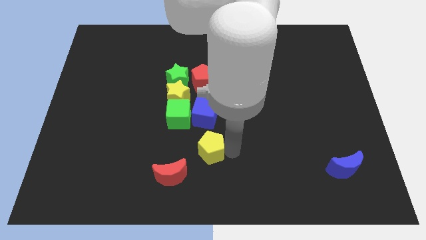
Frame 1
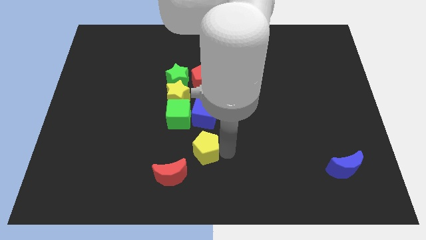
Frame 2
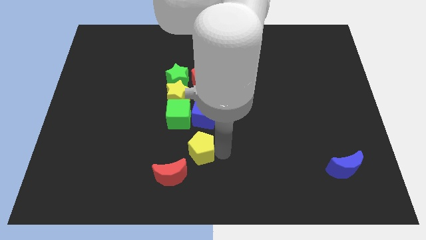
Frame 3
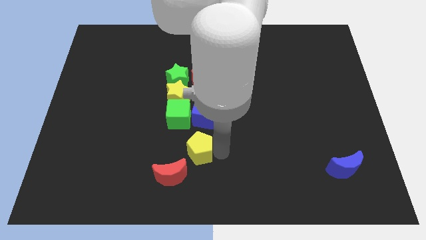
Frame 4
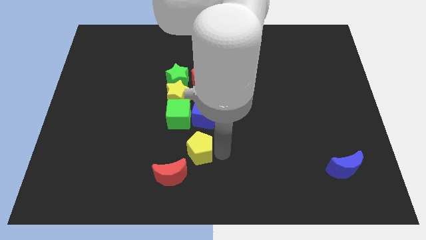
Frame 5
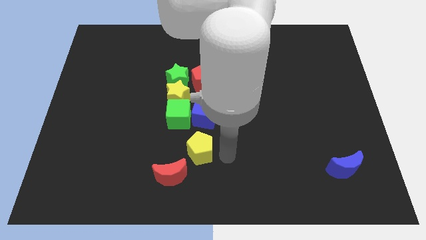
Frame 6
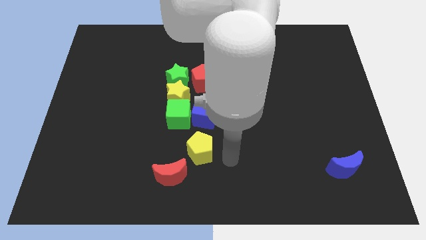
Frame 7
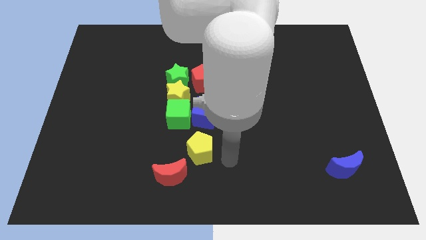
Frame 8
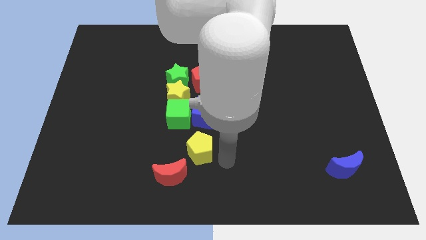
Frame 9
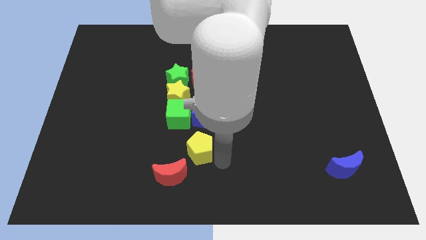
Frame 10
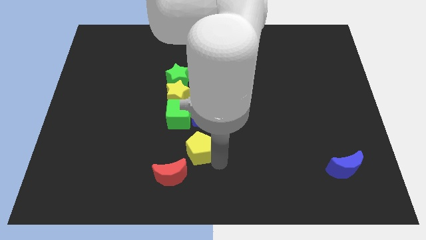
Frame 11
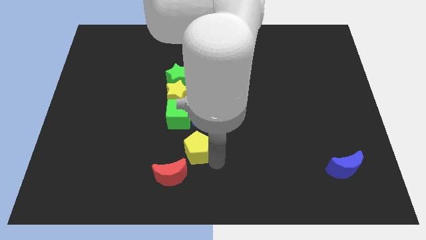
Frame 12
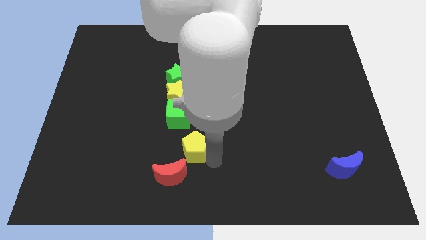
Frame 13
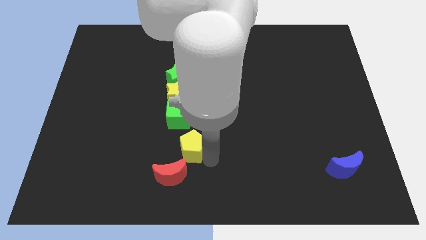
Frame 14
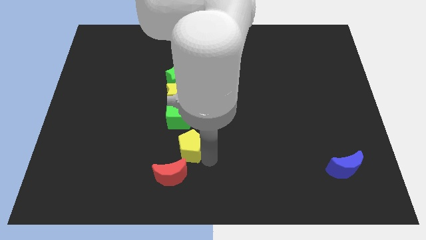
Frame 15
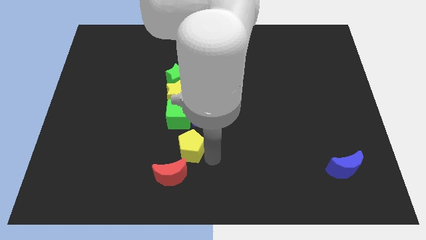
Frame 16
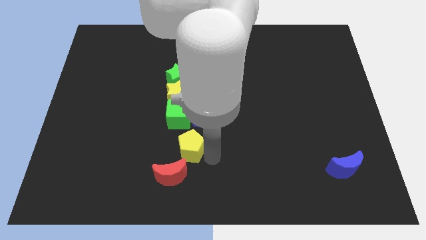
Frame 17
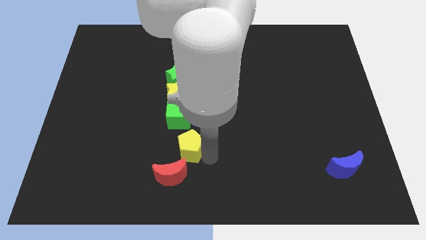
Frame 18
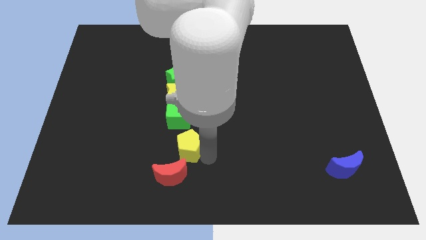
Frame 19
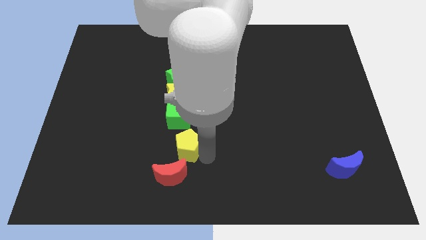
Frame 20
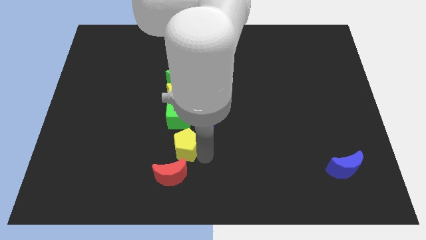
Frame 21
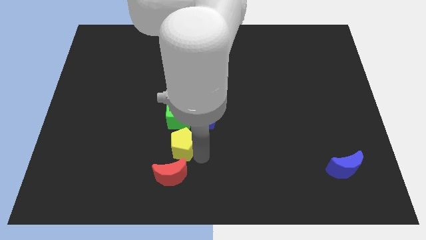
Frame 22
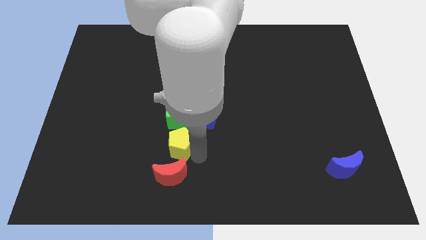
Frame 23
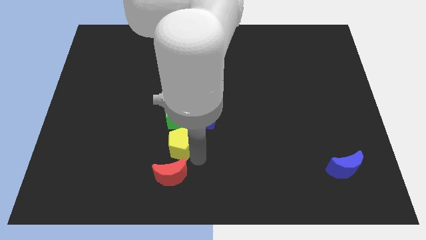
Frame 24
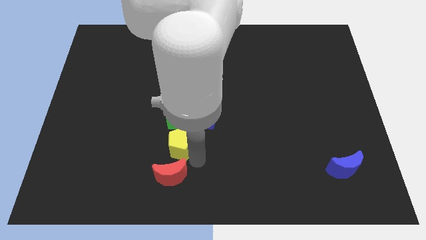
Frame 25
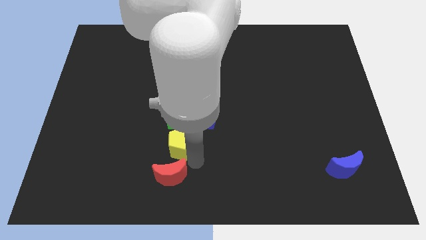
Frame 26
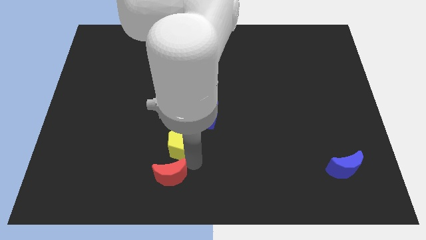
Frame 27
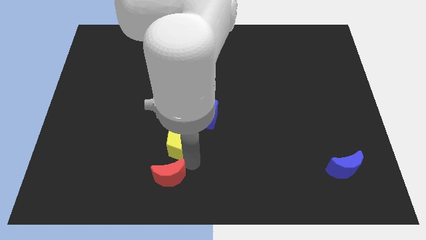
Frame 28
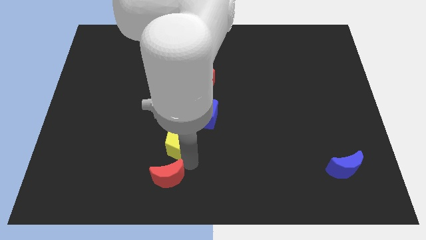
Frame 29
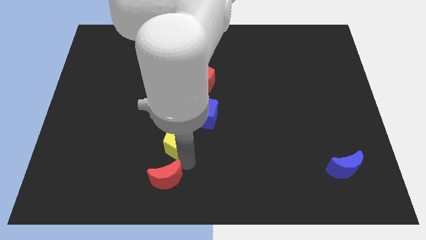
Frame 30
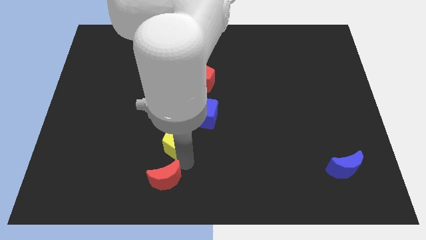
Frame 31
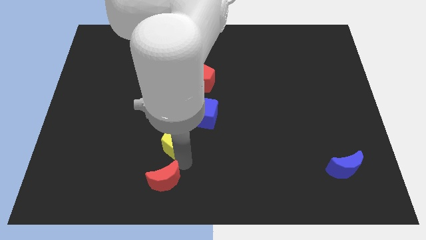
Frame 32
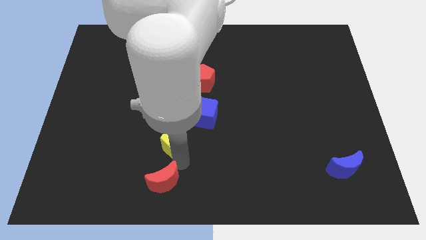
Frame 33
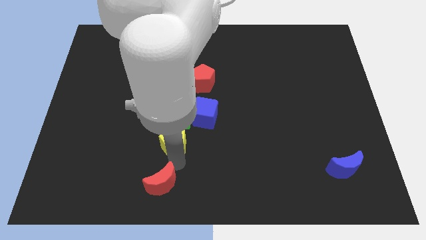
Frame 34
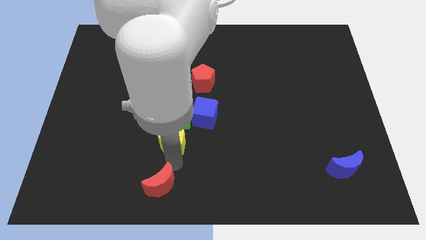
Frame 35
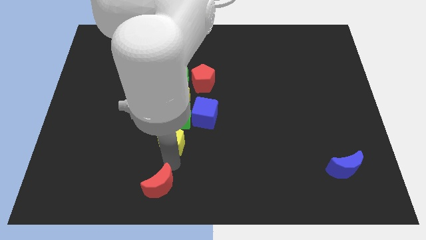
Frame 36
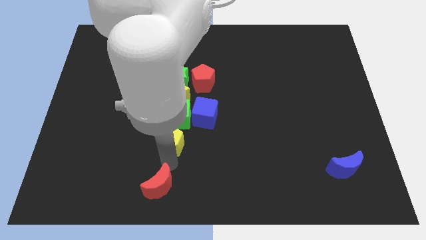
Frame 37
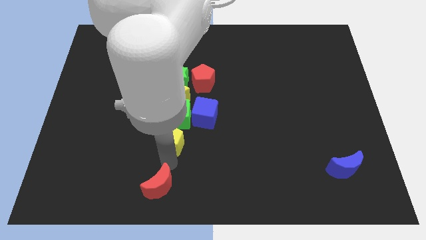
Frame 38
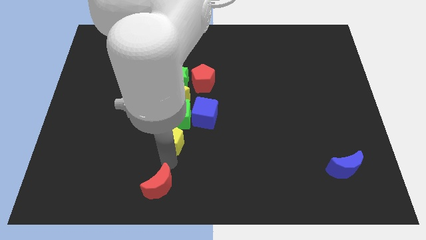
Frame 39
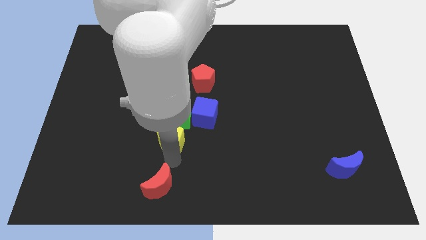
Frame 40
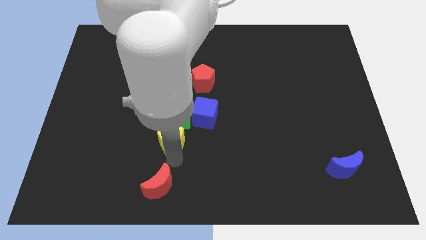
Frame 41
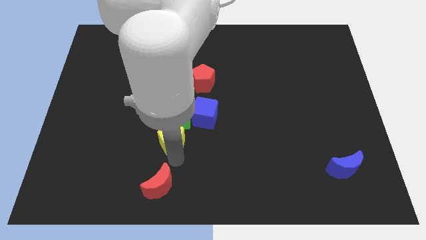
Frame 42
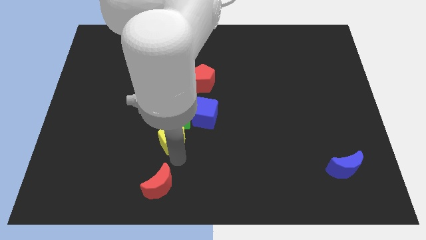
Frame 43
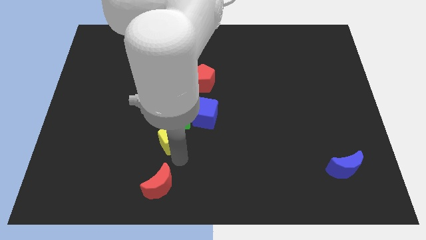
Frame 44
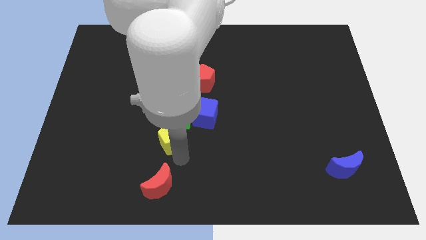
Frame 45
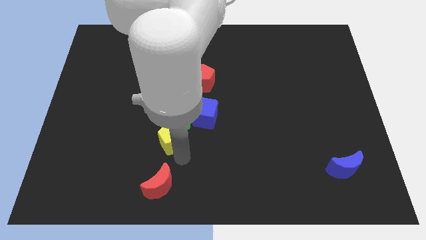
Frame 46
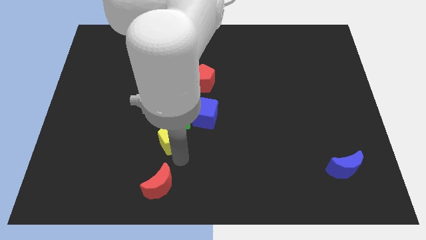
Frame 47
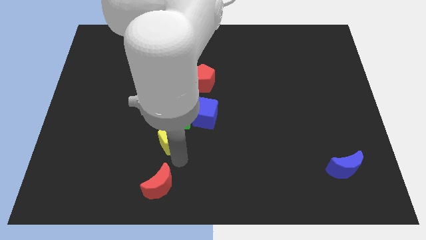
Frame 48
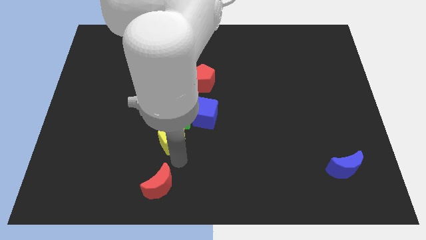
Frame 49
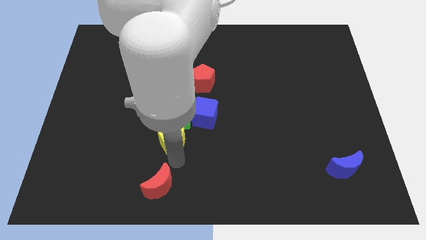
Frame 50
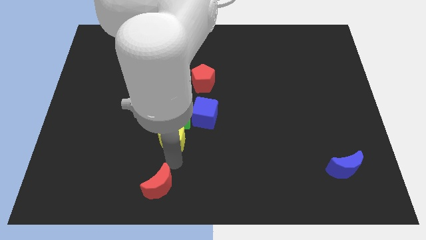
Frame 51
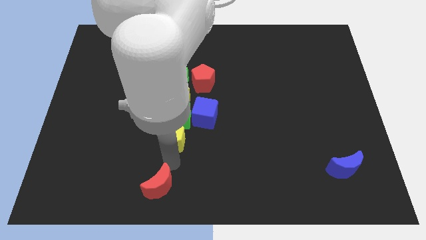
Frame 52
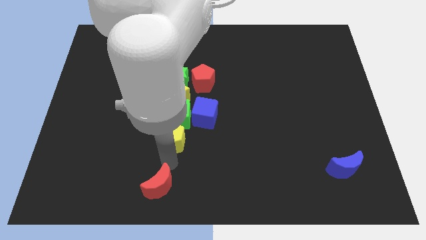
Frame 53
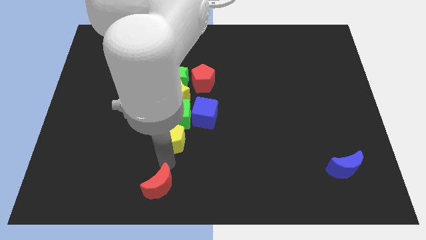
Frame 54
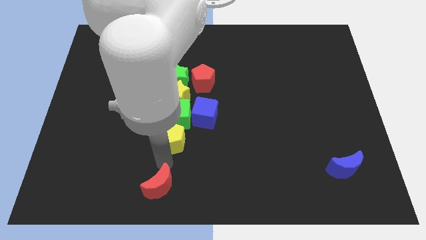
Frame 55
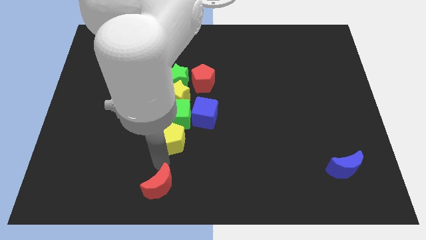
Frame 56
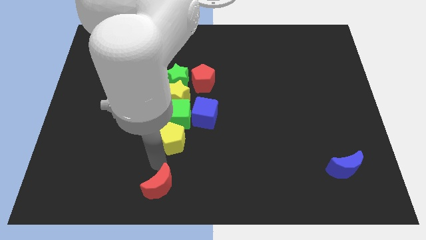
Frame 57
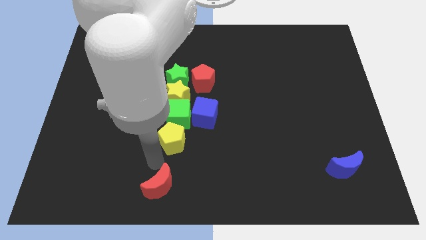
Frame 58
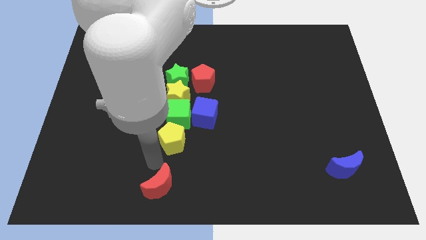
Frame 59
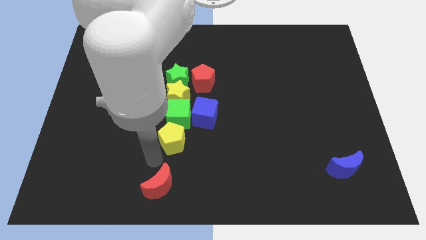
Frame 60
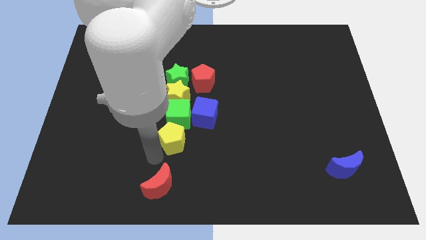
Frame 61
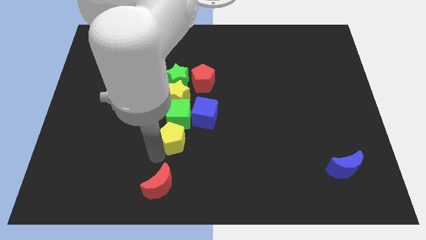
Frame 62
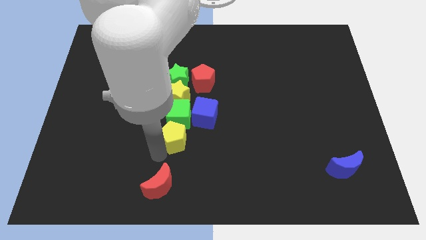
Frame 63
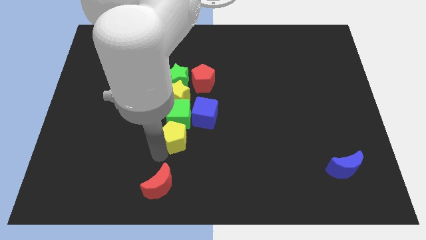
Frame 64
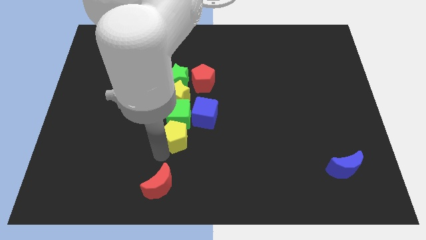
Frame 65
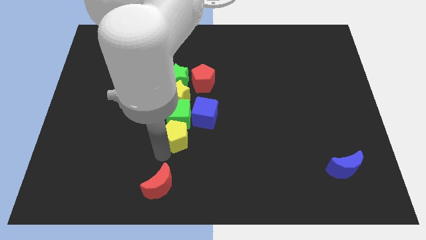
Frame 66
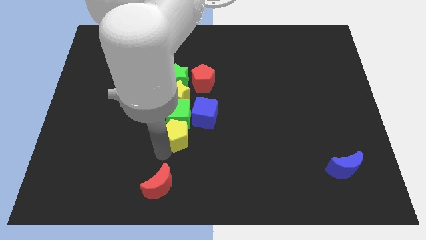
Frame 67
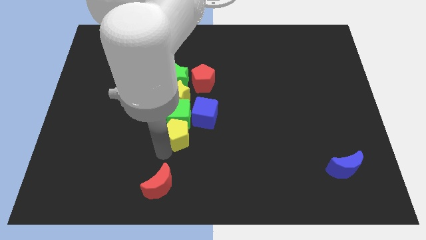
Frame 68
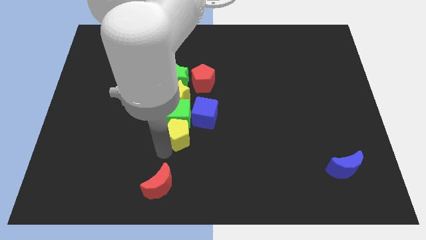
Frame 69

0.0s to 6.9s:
place yellow pentagon below green cube

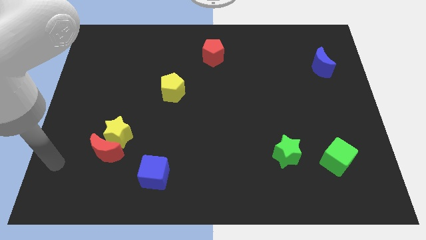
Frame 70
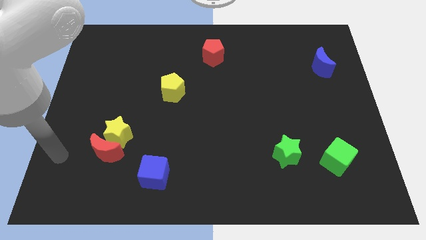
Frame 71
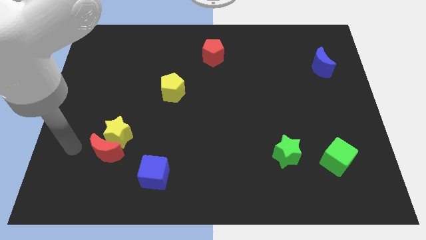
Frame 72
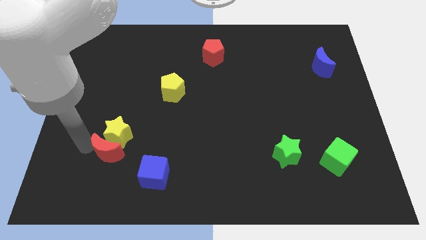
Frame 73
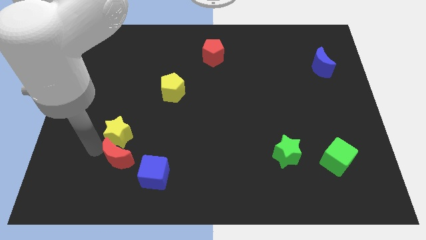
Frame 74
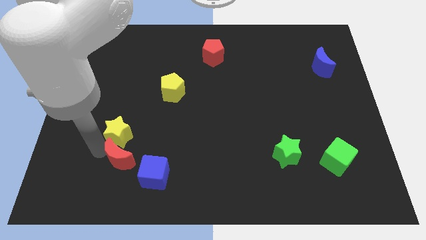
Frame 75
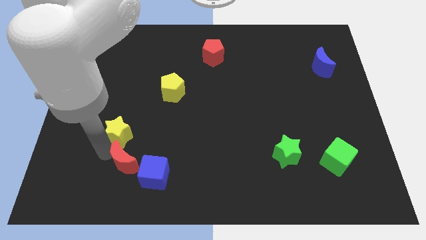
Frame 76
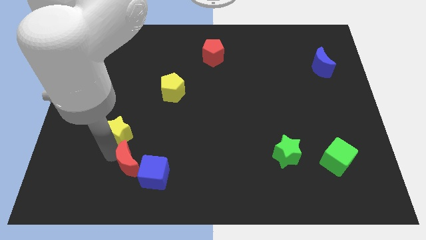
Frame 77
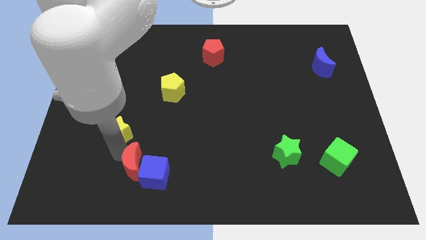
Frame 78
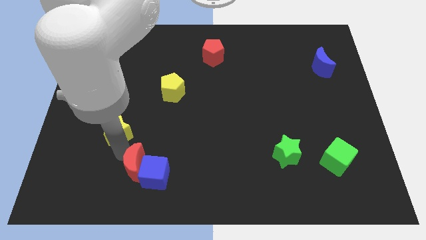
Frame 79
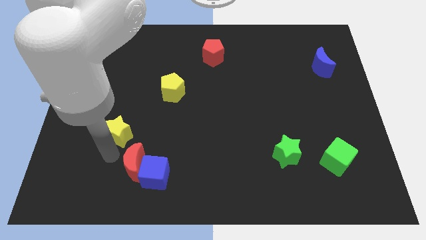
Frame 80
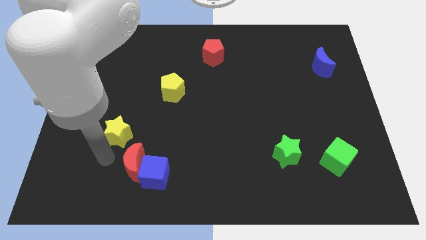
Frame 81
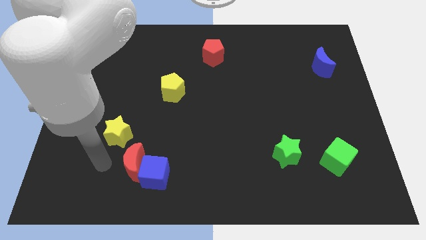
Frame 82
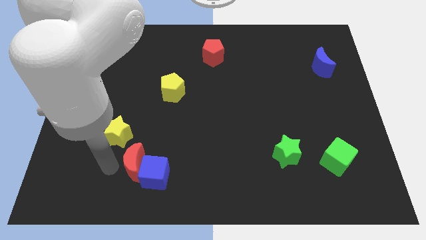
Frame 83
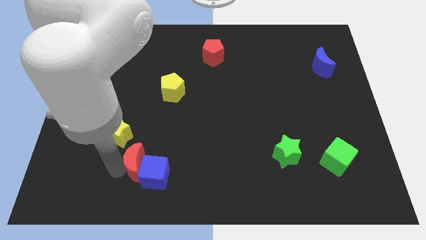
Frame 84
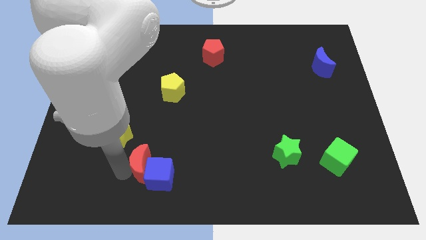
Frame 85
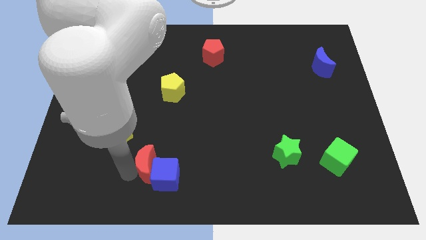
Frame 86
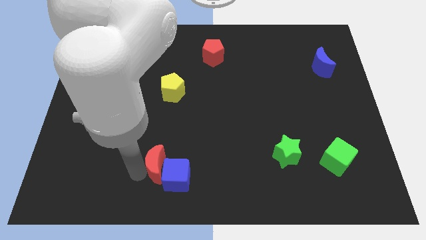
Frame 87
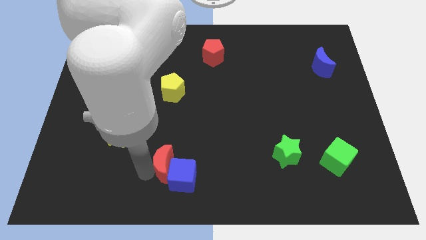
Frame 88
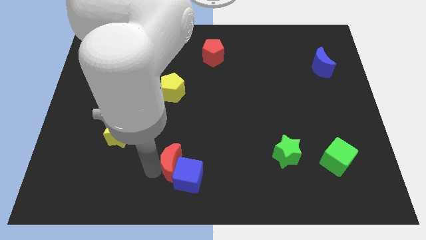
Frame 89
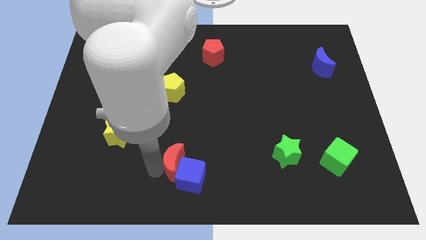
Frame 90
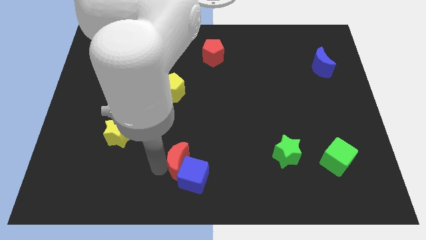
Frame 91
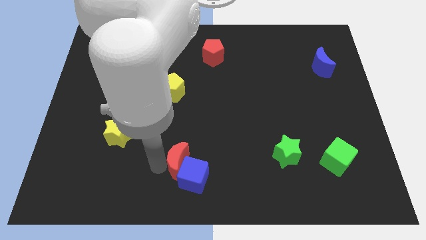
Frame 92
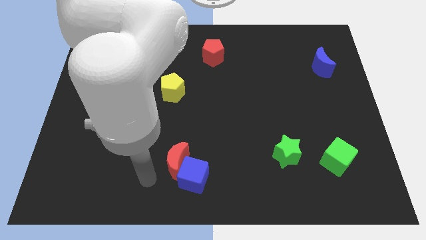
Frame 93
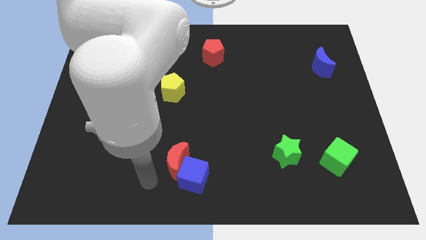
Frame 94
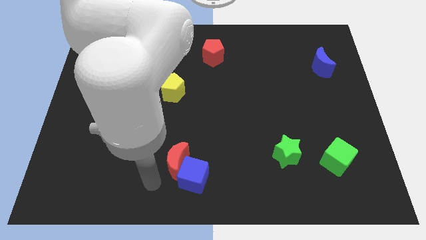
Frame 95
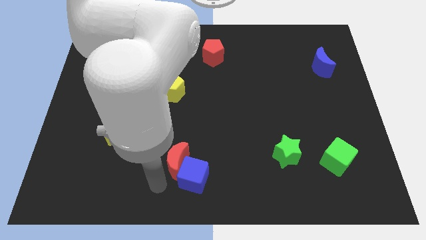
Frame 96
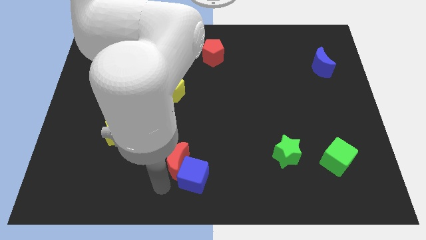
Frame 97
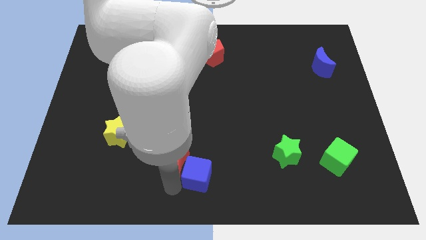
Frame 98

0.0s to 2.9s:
push the red moon into the blue cube
